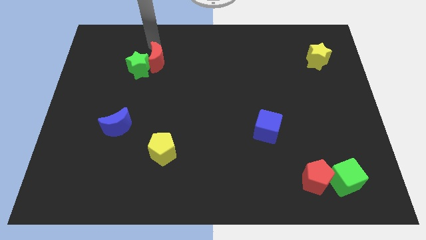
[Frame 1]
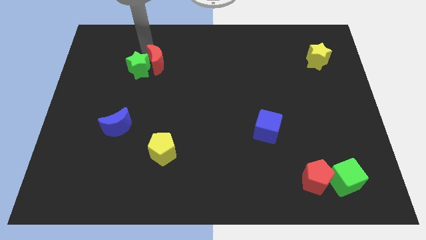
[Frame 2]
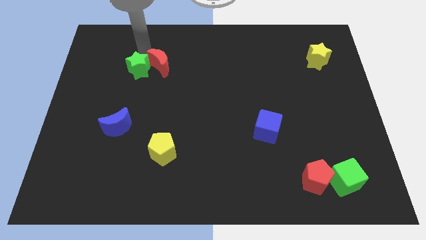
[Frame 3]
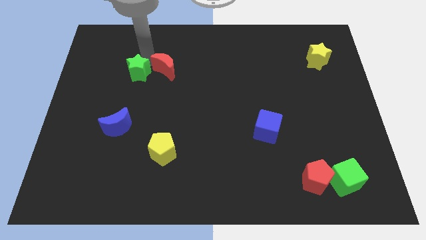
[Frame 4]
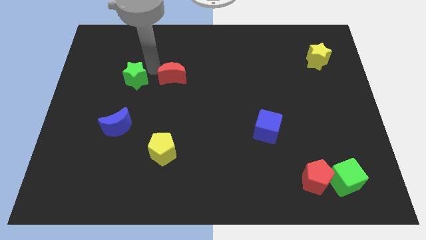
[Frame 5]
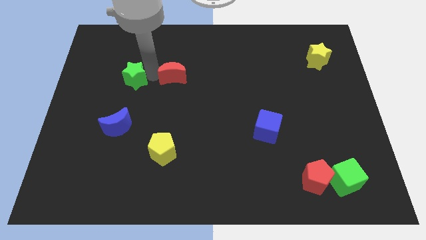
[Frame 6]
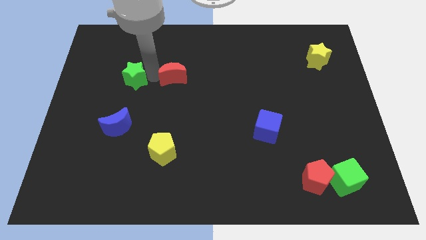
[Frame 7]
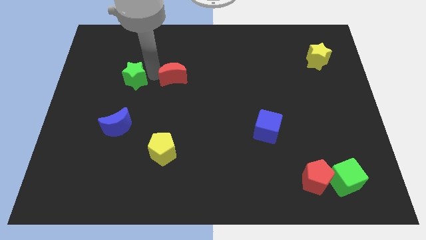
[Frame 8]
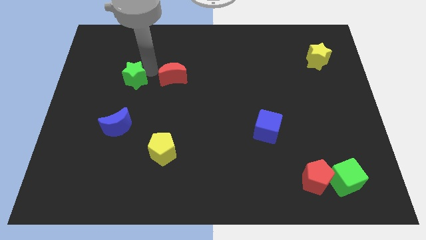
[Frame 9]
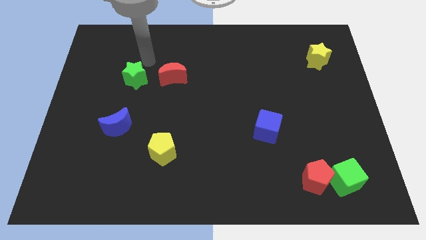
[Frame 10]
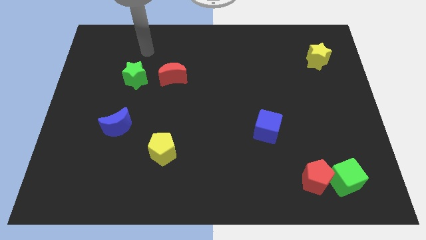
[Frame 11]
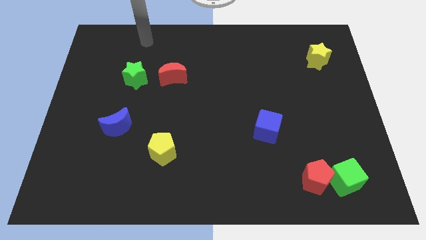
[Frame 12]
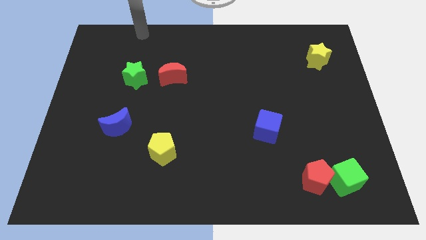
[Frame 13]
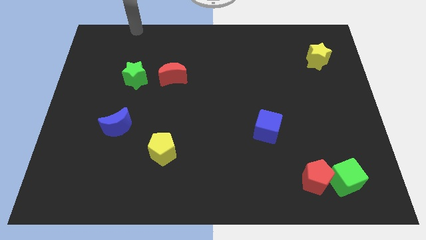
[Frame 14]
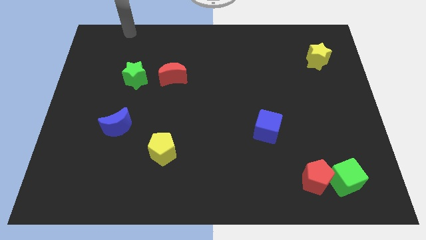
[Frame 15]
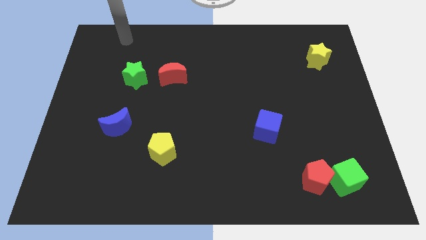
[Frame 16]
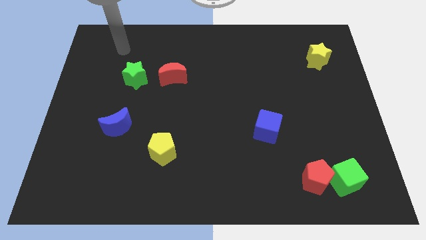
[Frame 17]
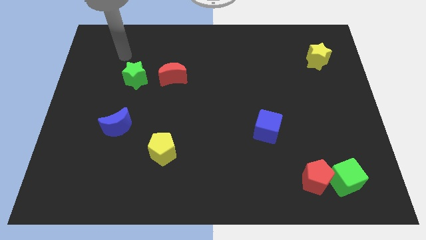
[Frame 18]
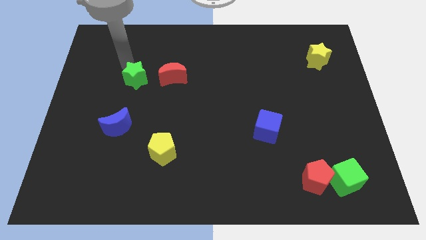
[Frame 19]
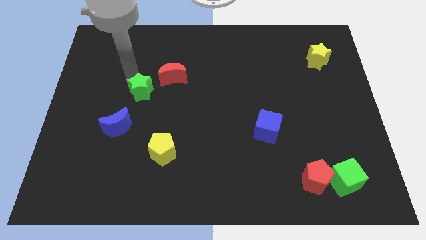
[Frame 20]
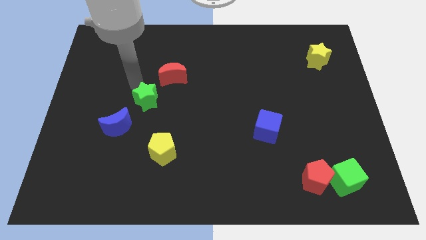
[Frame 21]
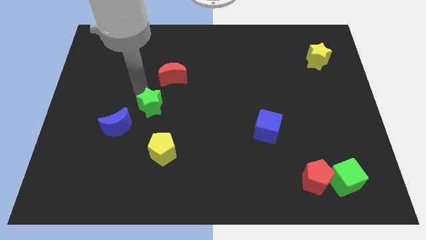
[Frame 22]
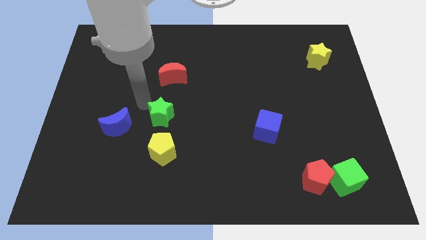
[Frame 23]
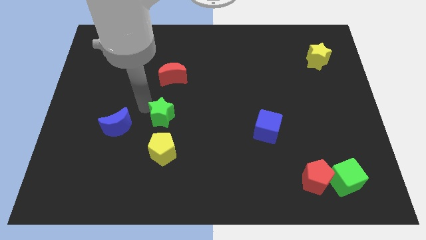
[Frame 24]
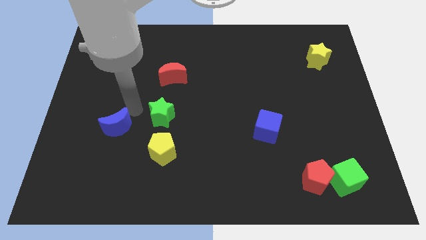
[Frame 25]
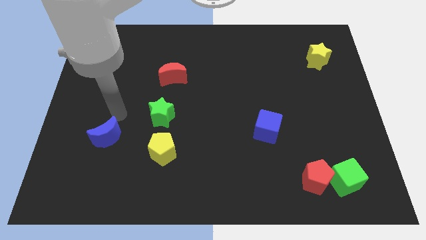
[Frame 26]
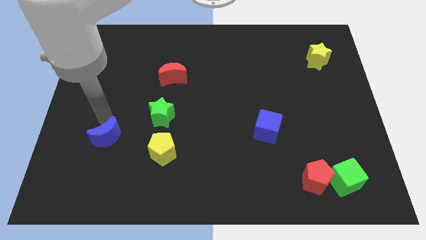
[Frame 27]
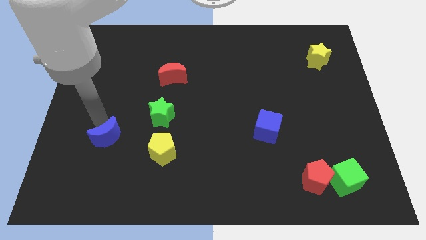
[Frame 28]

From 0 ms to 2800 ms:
push the green star close to the yellow pentagon

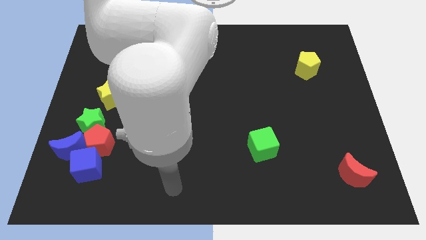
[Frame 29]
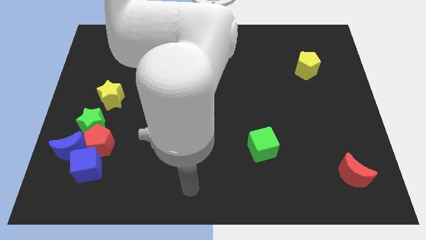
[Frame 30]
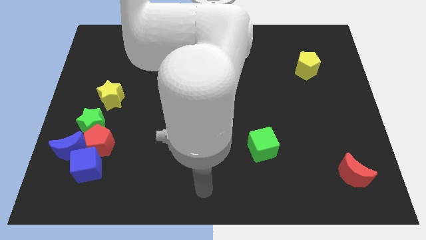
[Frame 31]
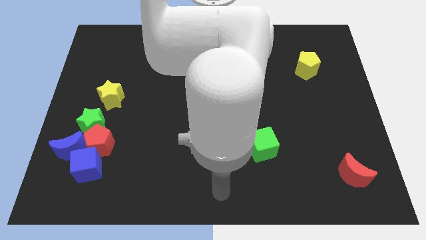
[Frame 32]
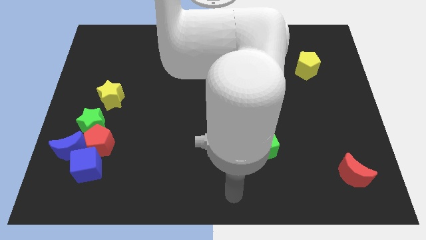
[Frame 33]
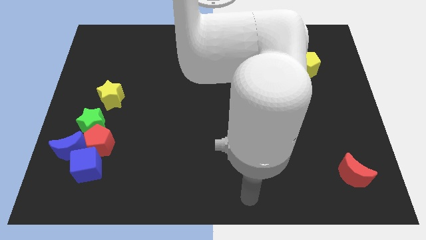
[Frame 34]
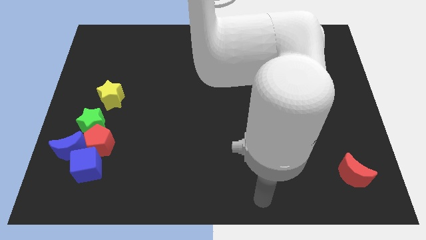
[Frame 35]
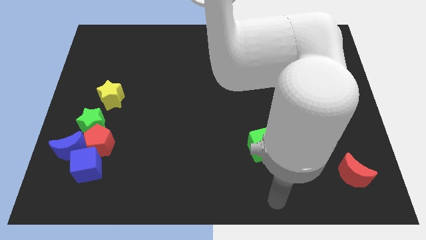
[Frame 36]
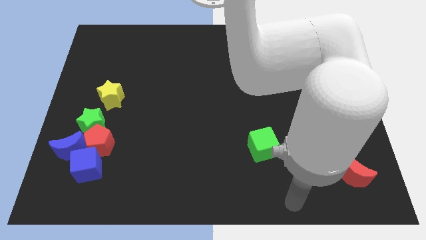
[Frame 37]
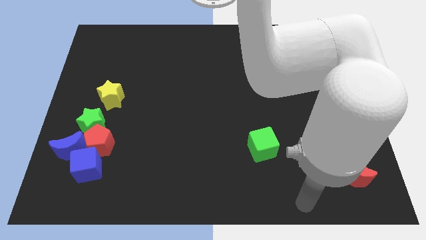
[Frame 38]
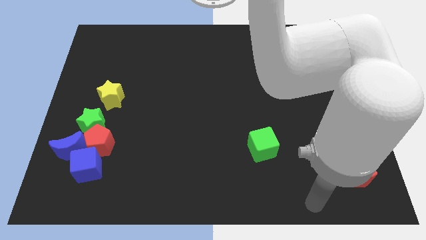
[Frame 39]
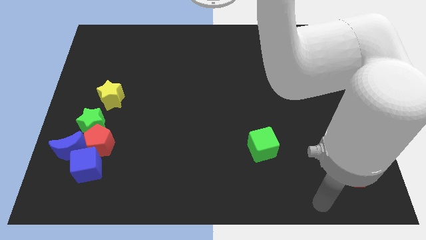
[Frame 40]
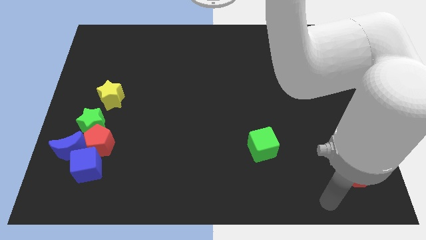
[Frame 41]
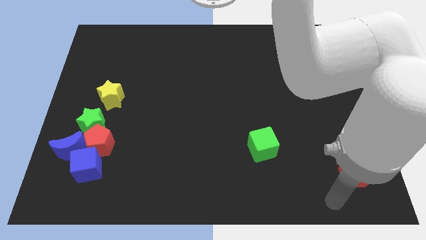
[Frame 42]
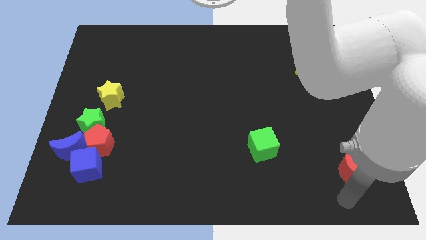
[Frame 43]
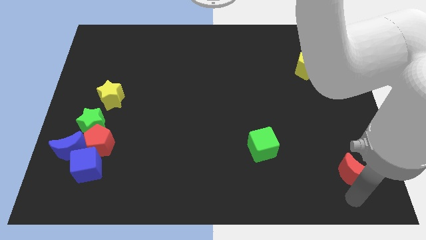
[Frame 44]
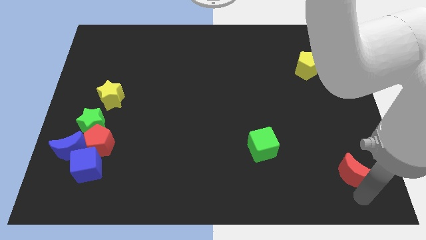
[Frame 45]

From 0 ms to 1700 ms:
move your arm to the bottom of the red crescent

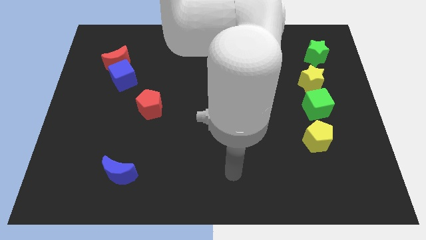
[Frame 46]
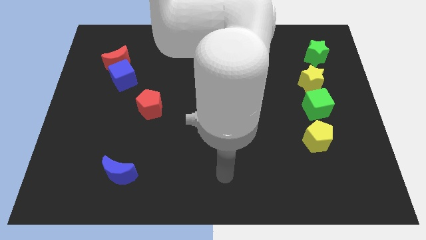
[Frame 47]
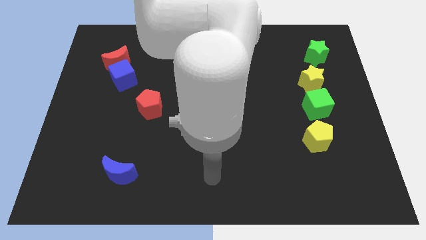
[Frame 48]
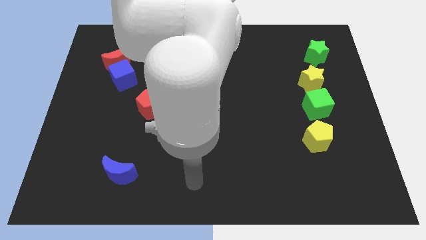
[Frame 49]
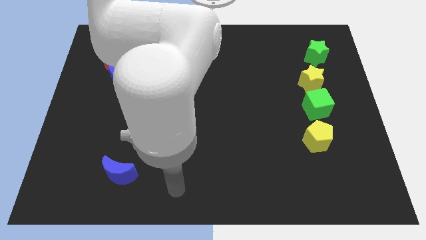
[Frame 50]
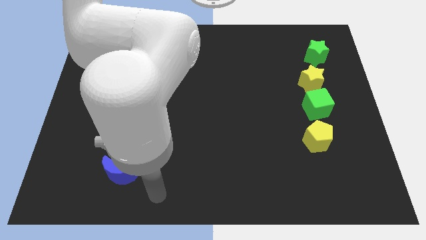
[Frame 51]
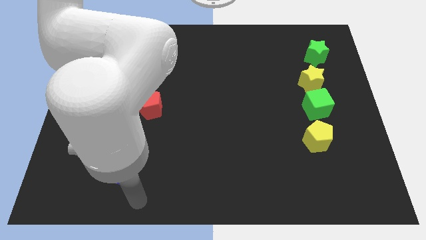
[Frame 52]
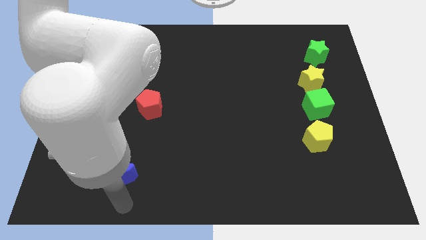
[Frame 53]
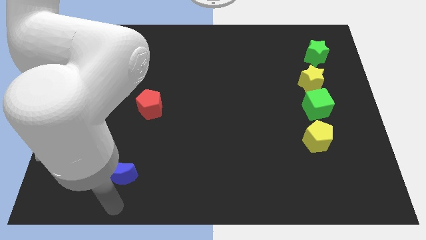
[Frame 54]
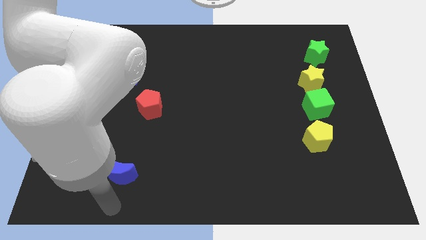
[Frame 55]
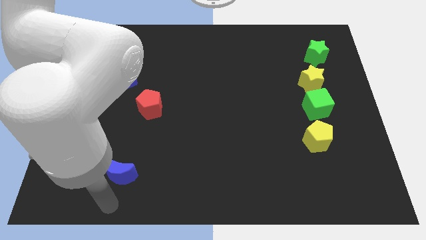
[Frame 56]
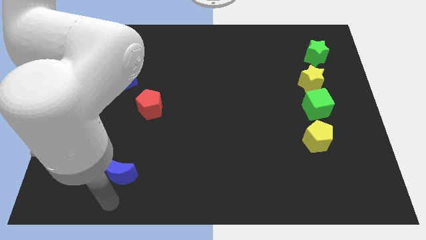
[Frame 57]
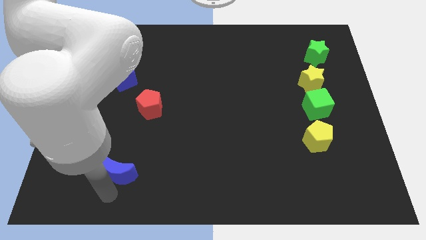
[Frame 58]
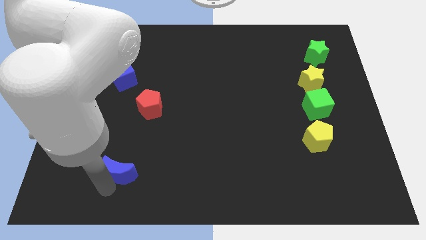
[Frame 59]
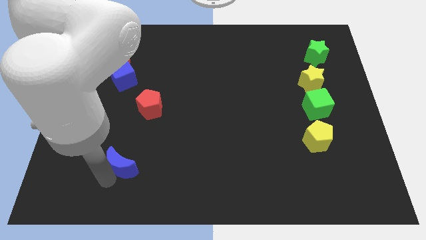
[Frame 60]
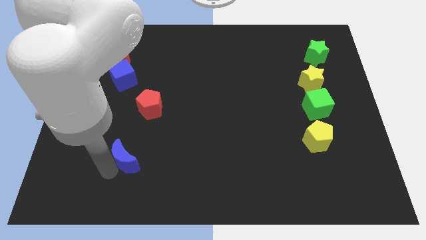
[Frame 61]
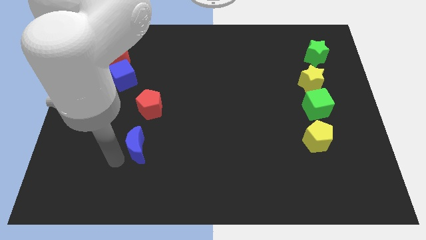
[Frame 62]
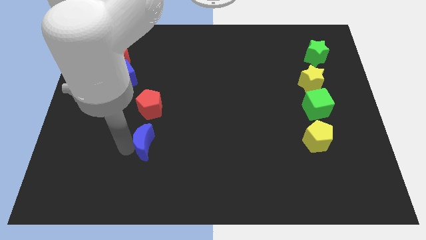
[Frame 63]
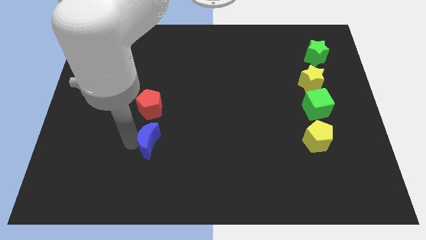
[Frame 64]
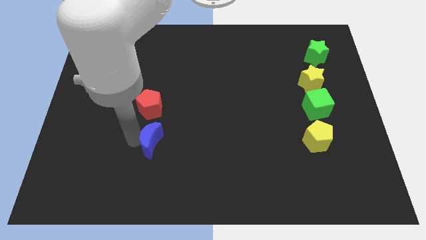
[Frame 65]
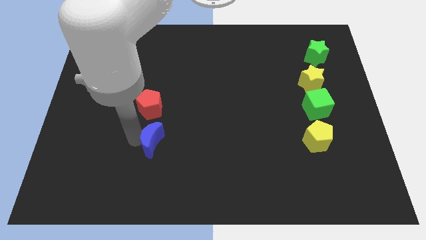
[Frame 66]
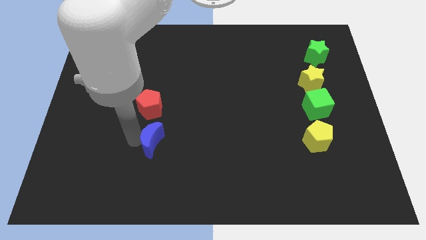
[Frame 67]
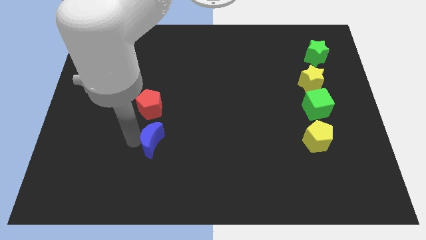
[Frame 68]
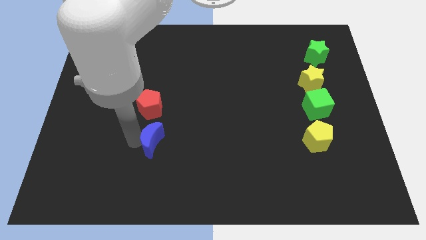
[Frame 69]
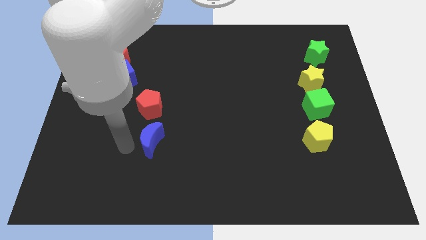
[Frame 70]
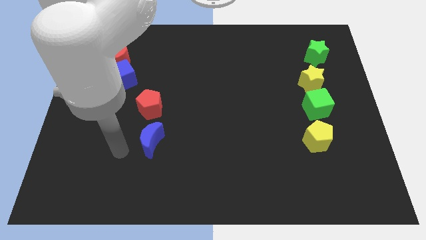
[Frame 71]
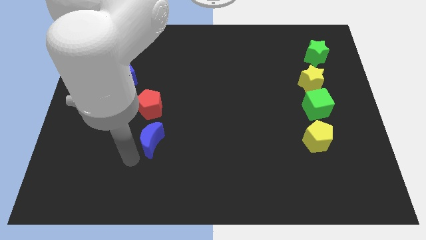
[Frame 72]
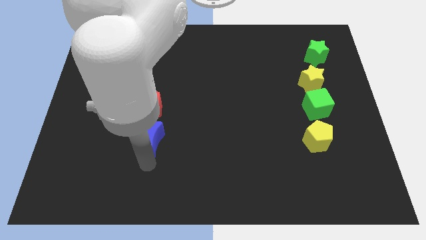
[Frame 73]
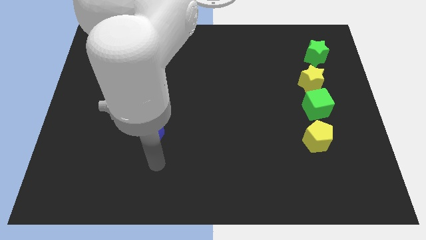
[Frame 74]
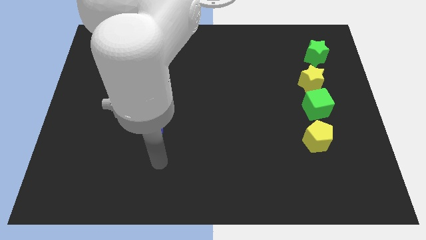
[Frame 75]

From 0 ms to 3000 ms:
move the blue moon down to the red pentagon

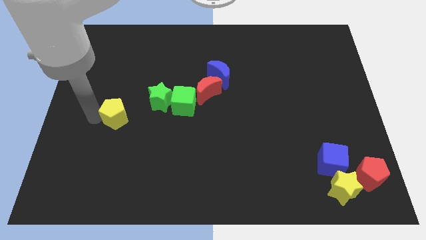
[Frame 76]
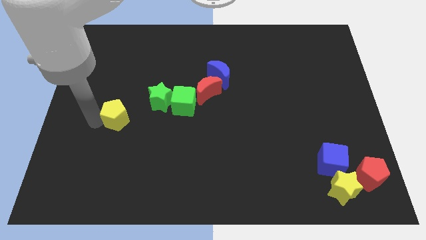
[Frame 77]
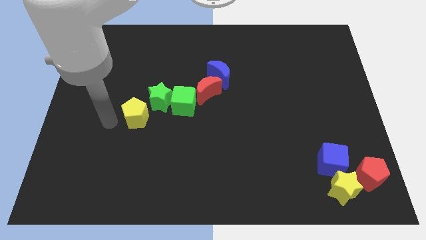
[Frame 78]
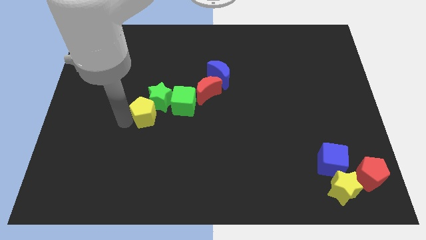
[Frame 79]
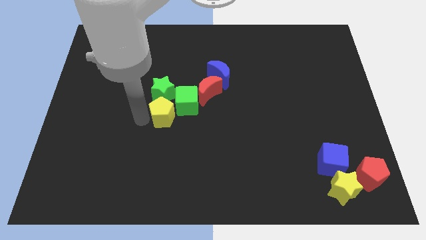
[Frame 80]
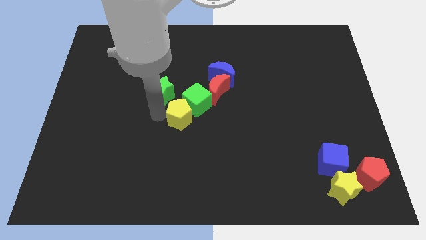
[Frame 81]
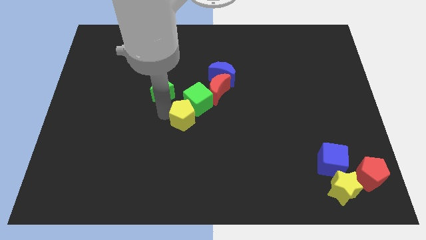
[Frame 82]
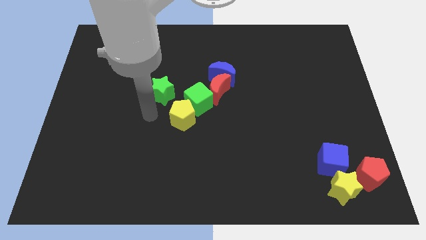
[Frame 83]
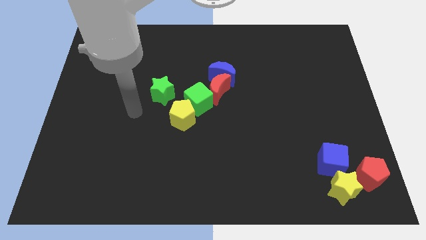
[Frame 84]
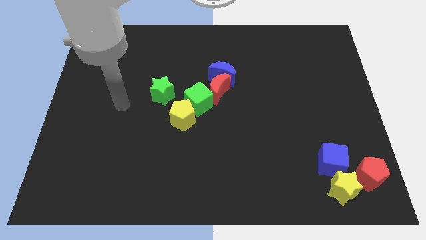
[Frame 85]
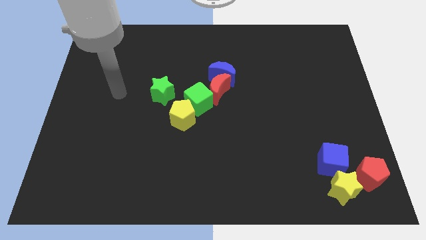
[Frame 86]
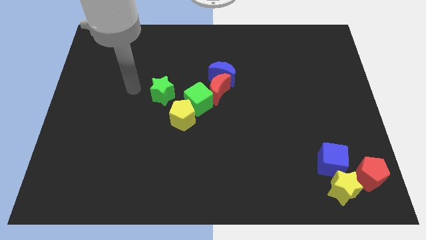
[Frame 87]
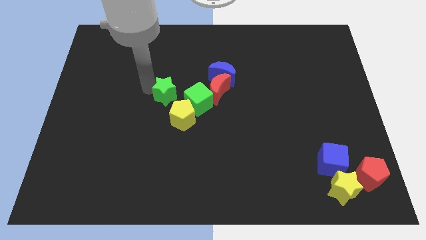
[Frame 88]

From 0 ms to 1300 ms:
push the yellow pentagon into the green cube

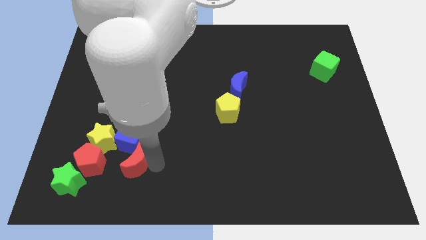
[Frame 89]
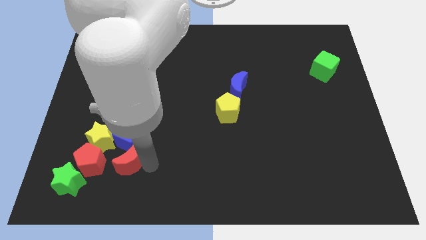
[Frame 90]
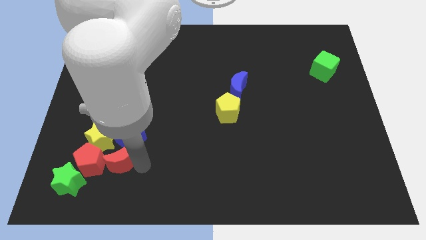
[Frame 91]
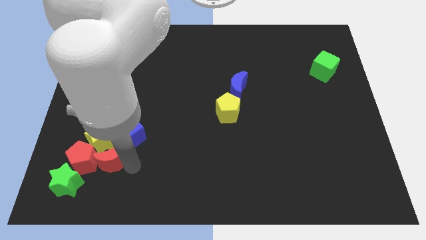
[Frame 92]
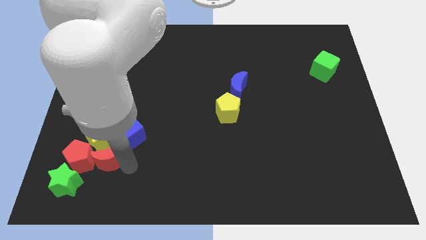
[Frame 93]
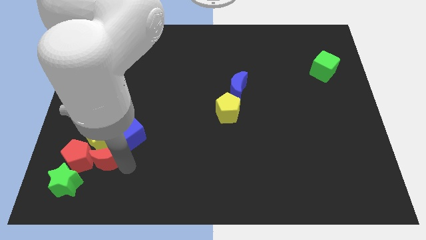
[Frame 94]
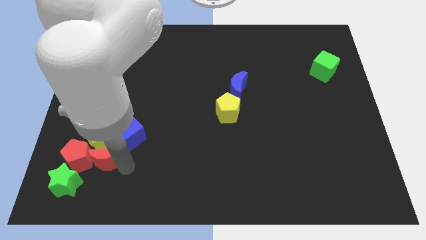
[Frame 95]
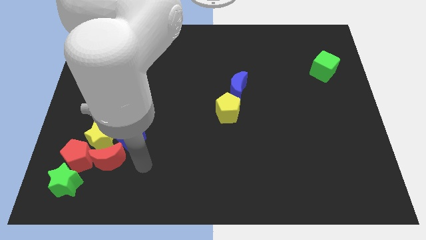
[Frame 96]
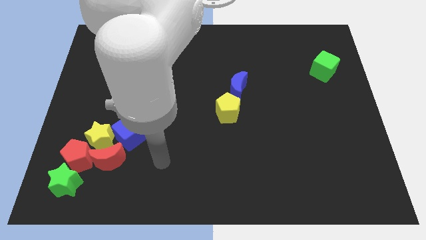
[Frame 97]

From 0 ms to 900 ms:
push the red crescent to the right of the red pentagon
